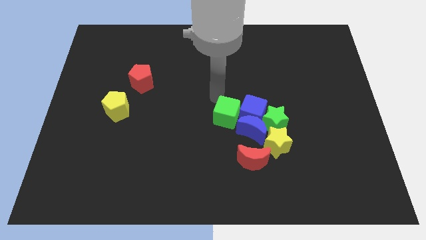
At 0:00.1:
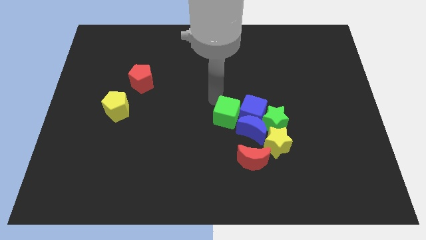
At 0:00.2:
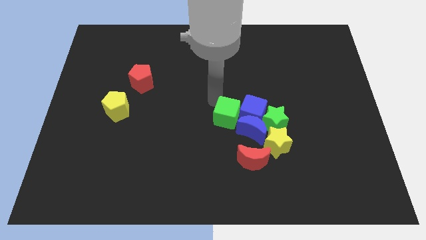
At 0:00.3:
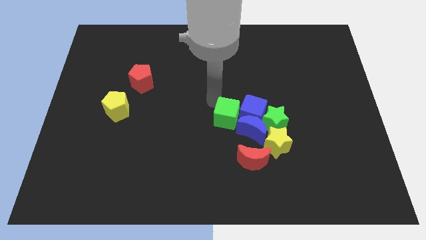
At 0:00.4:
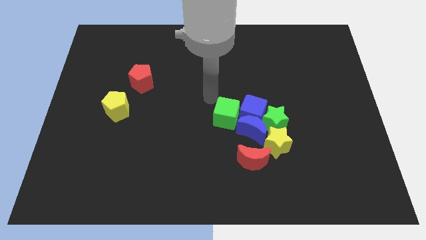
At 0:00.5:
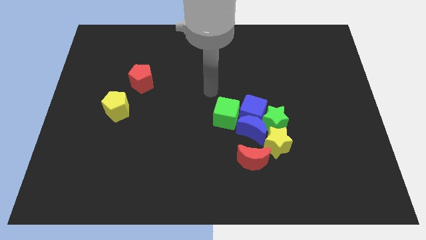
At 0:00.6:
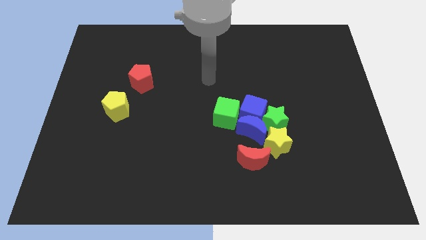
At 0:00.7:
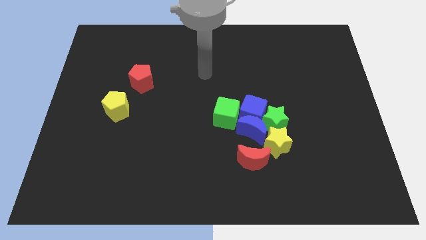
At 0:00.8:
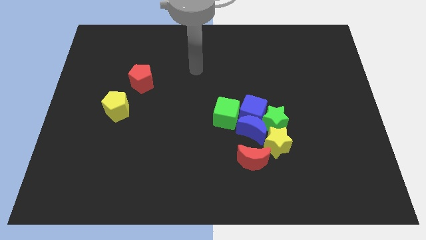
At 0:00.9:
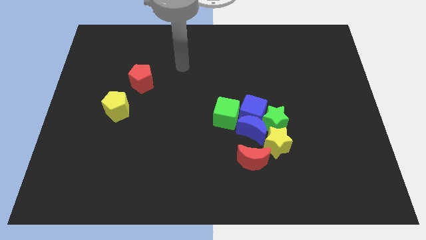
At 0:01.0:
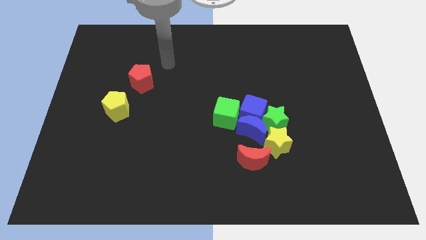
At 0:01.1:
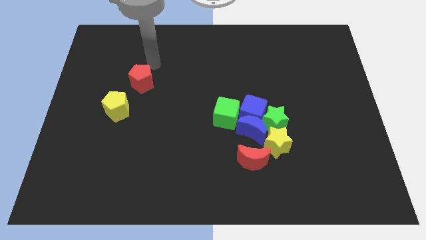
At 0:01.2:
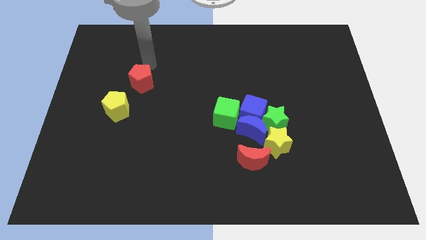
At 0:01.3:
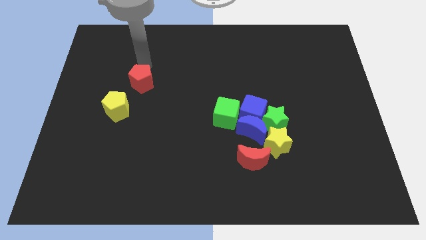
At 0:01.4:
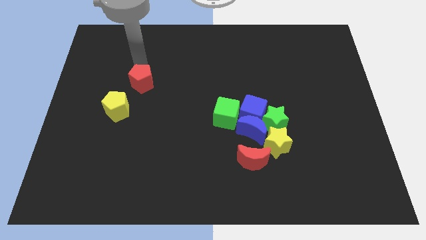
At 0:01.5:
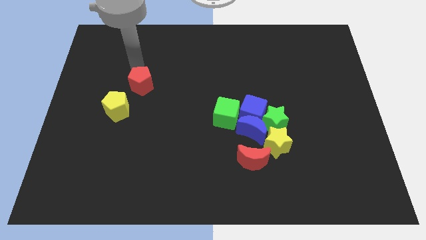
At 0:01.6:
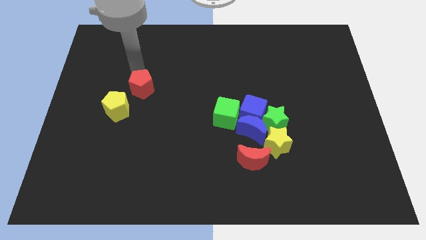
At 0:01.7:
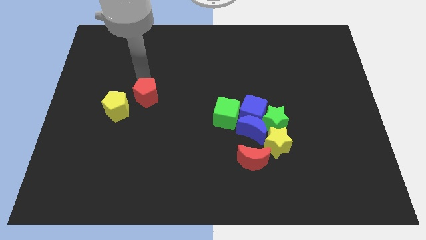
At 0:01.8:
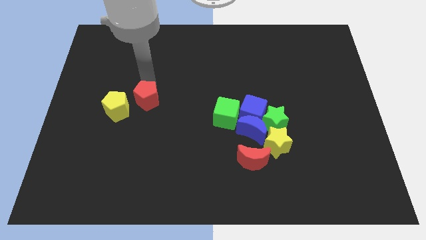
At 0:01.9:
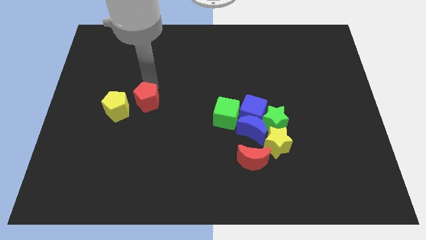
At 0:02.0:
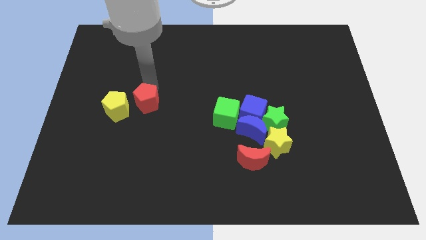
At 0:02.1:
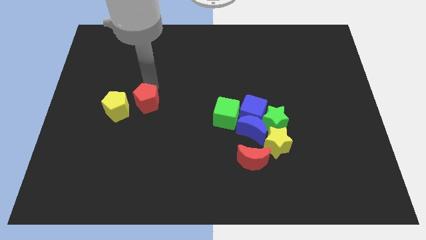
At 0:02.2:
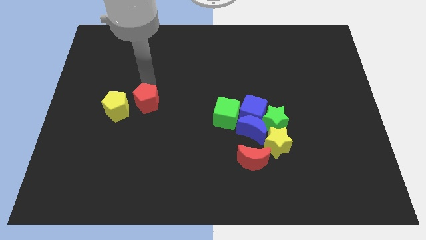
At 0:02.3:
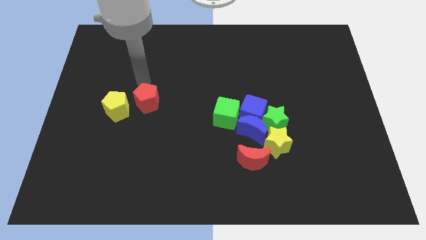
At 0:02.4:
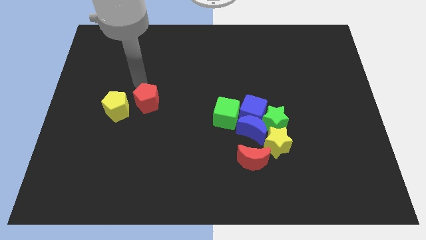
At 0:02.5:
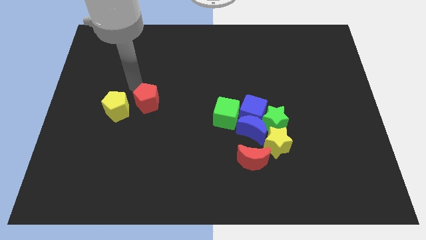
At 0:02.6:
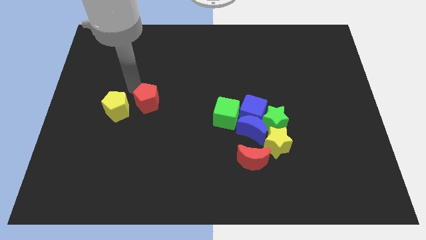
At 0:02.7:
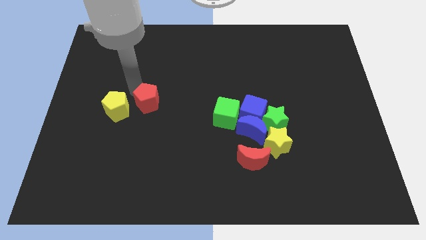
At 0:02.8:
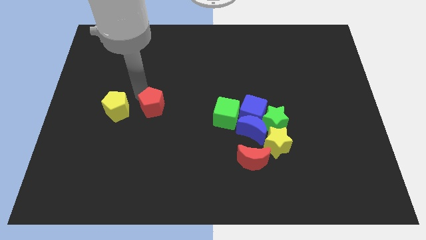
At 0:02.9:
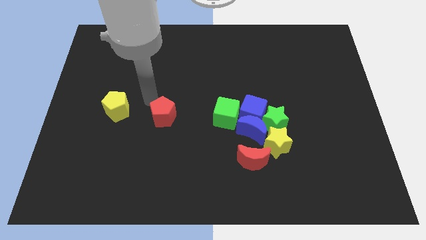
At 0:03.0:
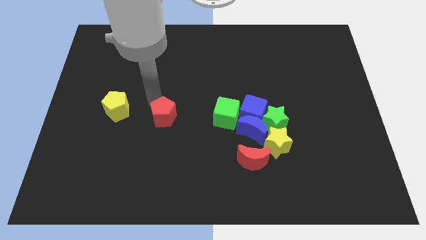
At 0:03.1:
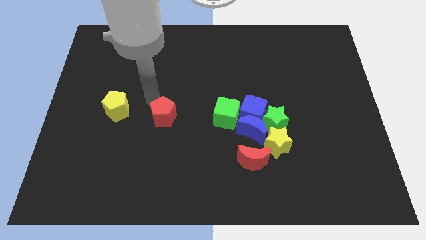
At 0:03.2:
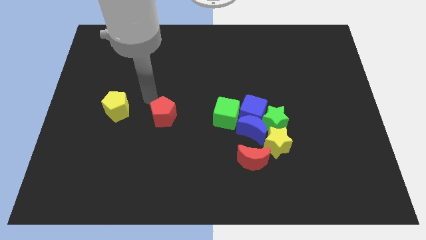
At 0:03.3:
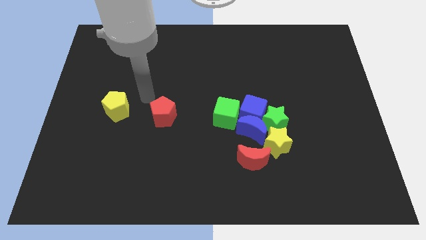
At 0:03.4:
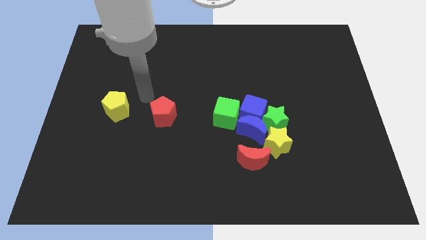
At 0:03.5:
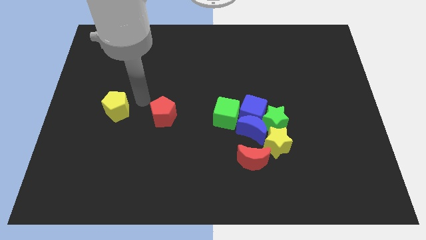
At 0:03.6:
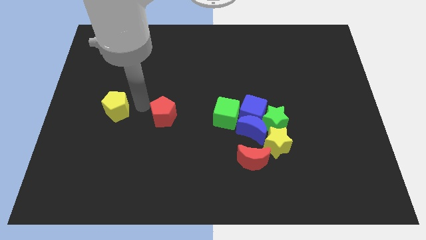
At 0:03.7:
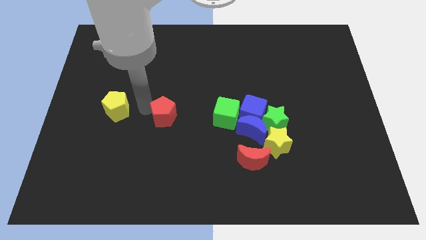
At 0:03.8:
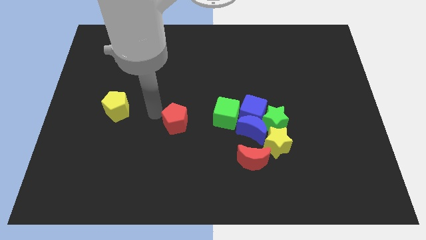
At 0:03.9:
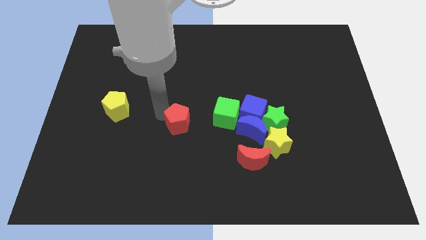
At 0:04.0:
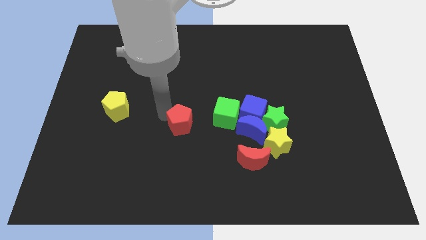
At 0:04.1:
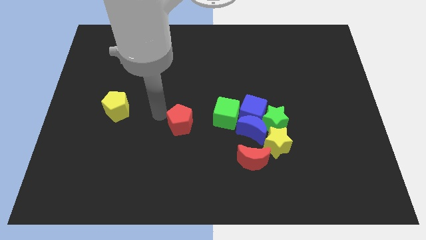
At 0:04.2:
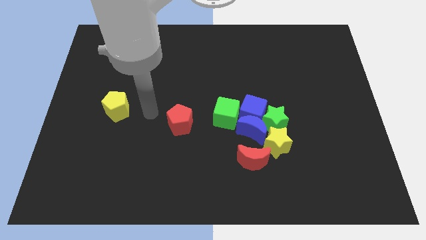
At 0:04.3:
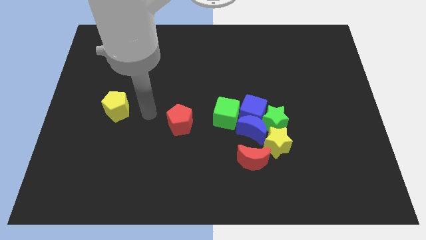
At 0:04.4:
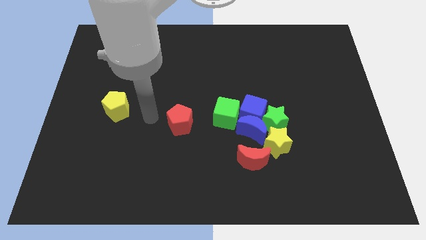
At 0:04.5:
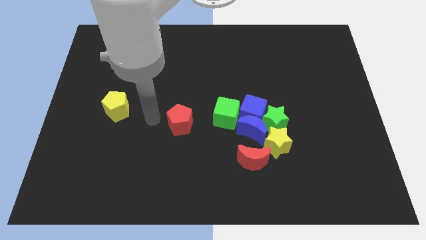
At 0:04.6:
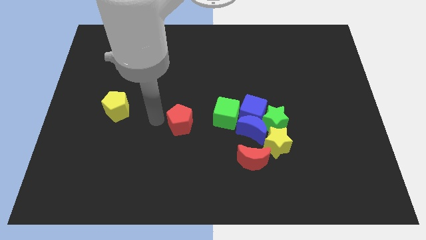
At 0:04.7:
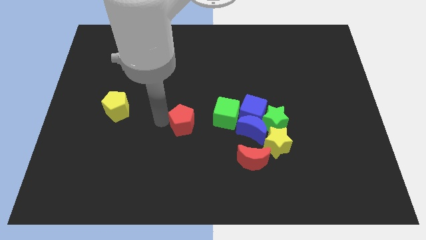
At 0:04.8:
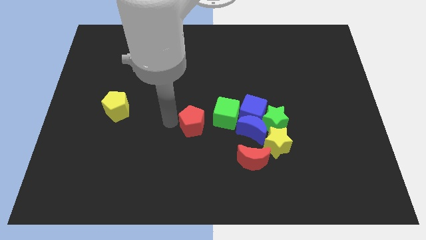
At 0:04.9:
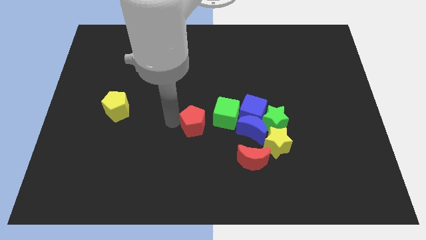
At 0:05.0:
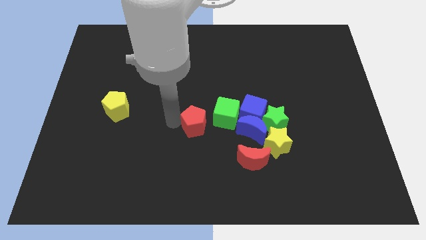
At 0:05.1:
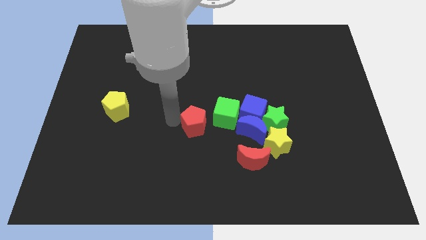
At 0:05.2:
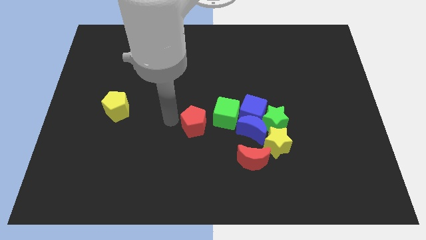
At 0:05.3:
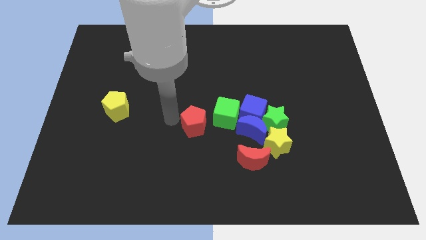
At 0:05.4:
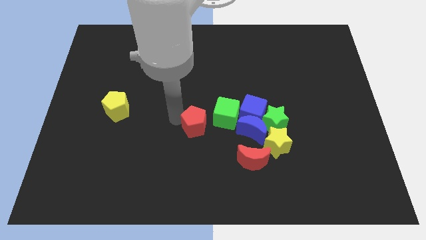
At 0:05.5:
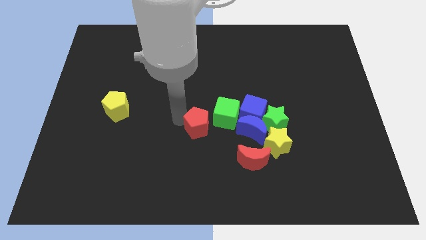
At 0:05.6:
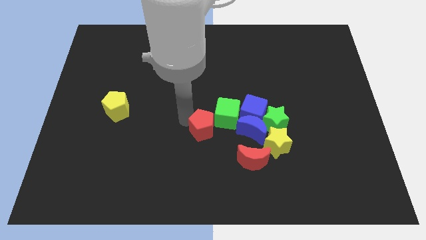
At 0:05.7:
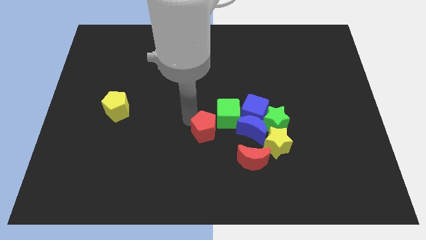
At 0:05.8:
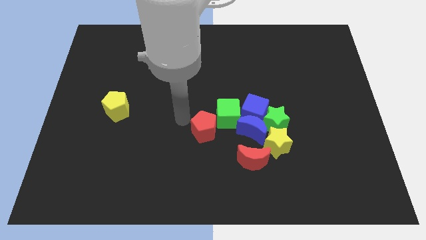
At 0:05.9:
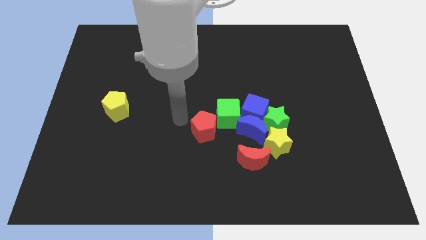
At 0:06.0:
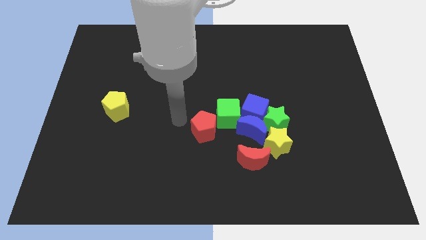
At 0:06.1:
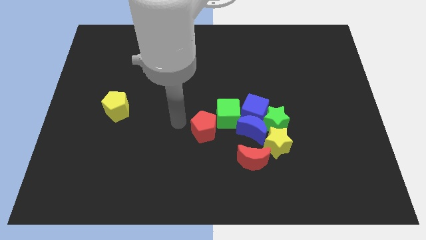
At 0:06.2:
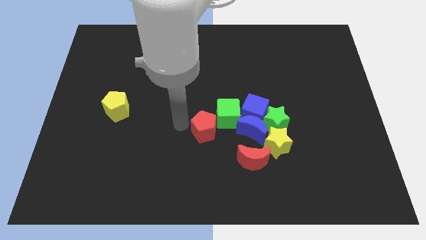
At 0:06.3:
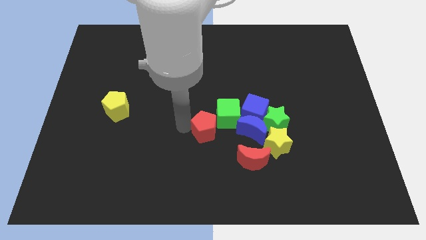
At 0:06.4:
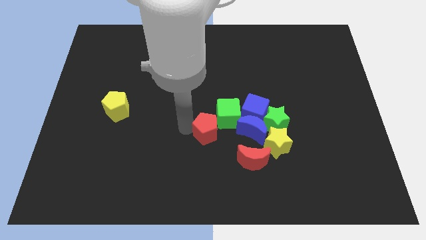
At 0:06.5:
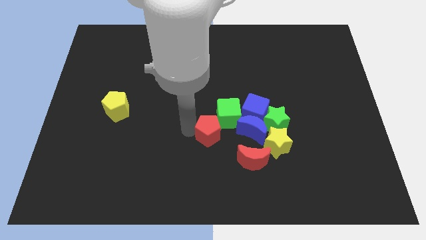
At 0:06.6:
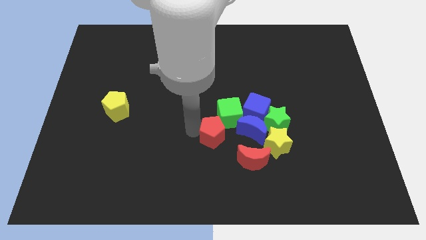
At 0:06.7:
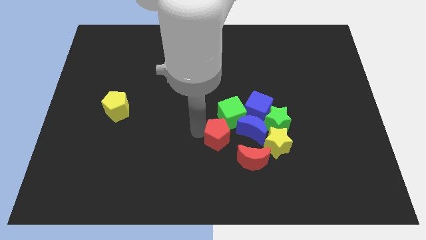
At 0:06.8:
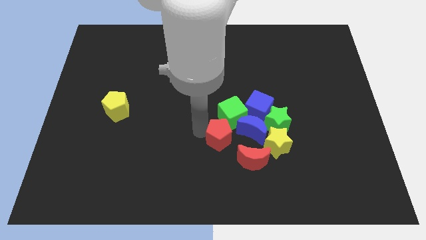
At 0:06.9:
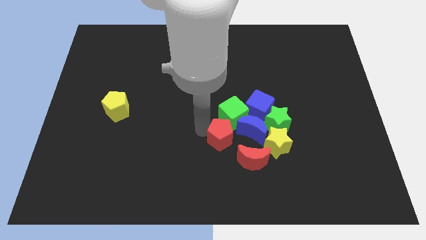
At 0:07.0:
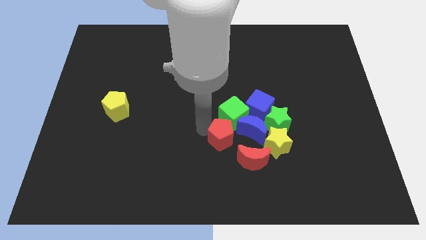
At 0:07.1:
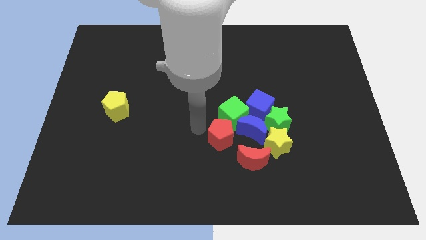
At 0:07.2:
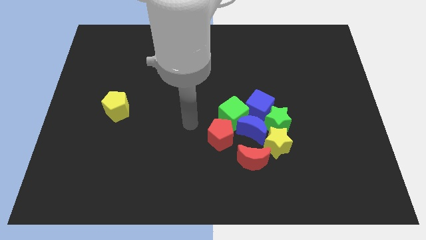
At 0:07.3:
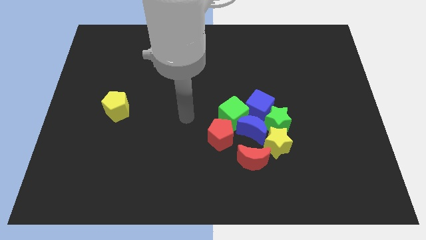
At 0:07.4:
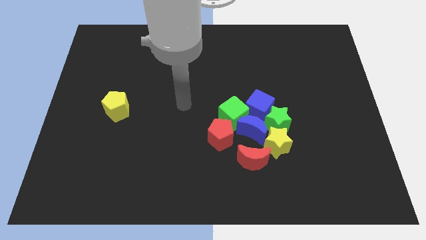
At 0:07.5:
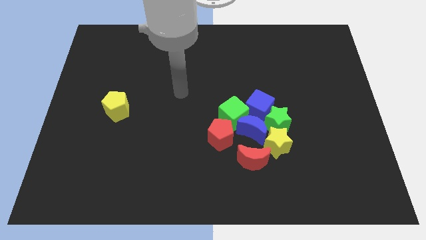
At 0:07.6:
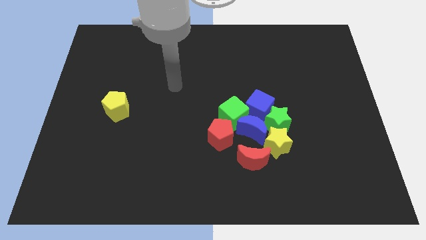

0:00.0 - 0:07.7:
move the red pentagon daigonally to the green cube

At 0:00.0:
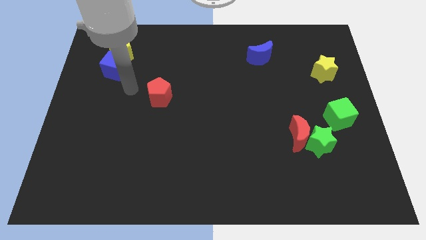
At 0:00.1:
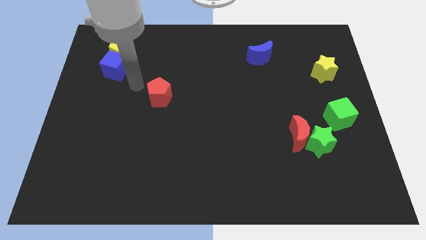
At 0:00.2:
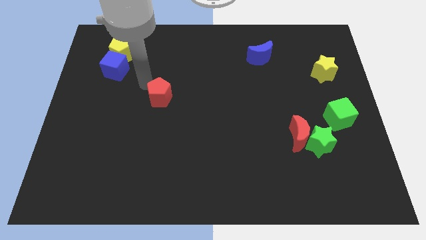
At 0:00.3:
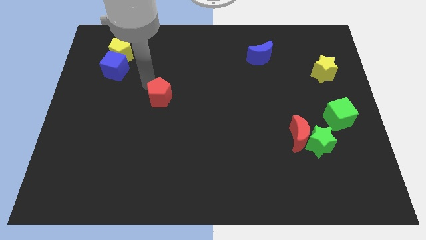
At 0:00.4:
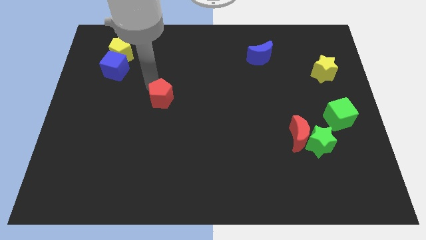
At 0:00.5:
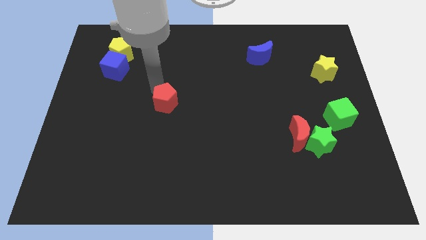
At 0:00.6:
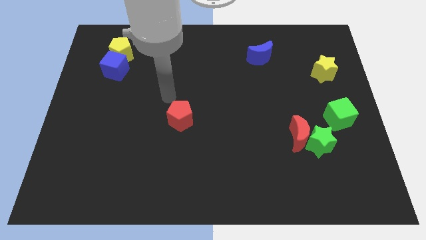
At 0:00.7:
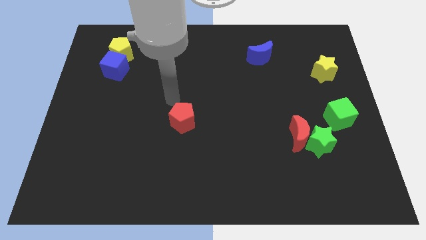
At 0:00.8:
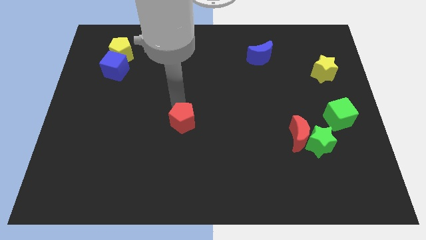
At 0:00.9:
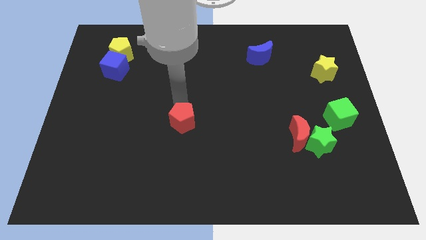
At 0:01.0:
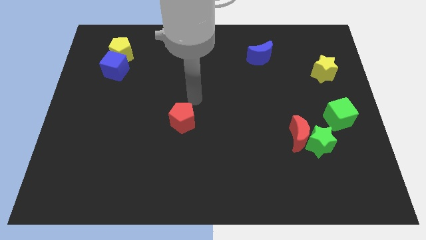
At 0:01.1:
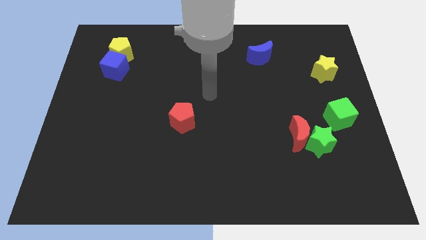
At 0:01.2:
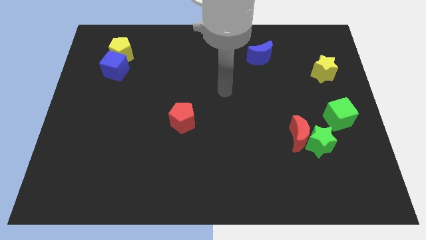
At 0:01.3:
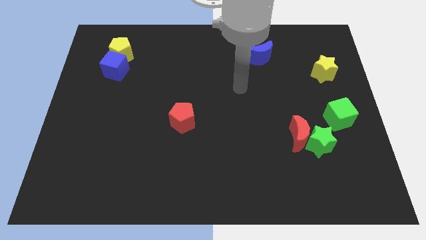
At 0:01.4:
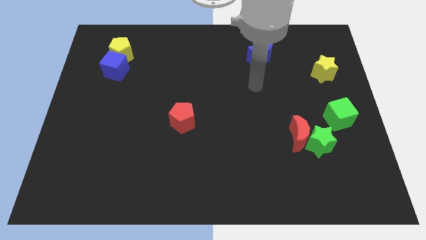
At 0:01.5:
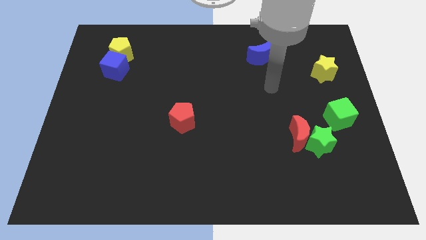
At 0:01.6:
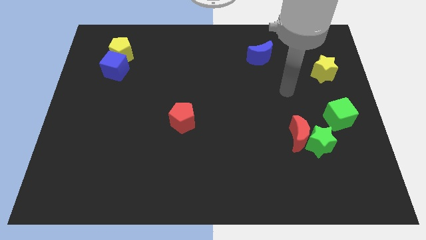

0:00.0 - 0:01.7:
place the red pentagon at center of the board
